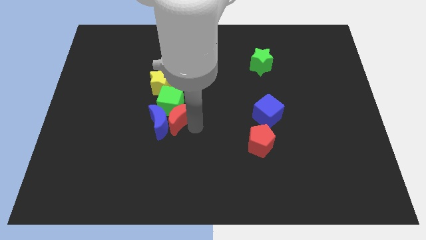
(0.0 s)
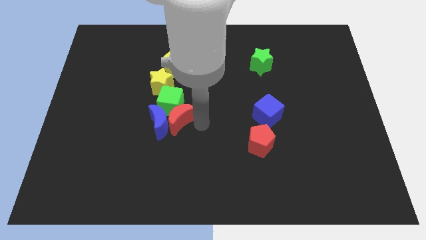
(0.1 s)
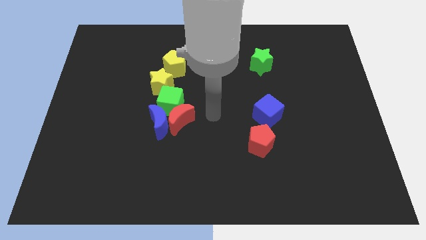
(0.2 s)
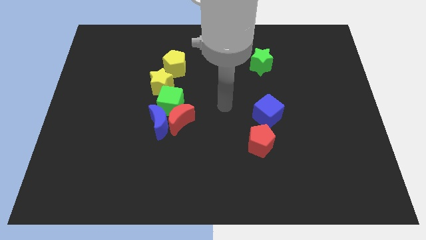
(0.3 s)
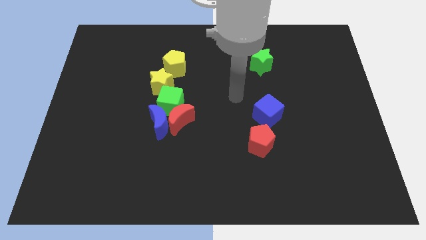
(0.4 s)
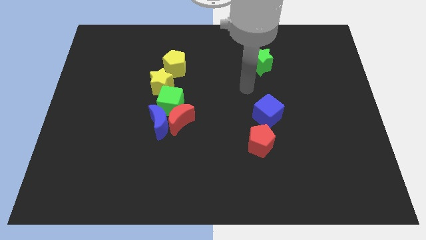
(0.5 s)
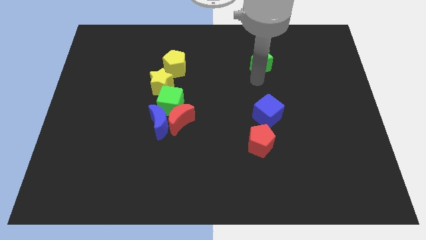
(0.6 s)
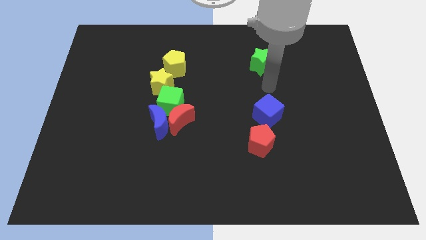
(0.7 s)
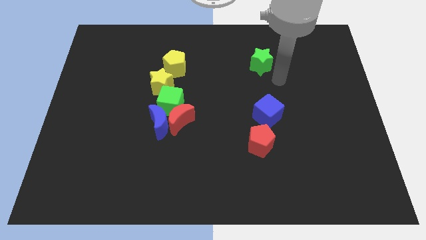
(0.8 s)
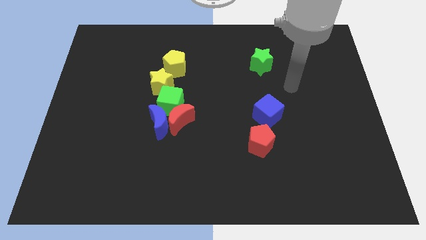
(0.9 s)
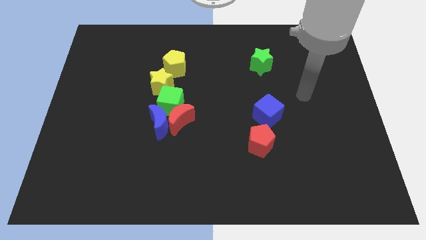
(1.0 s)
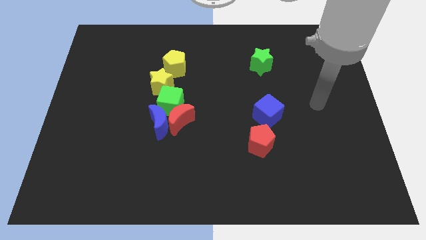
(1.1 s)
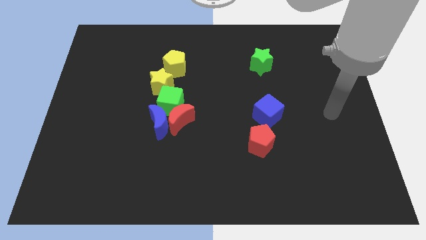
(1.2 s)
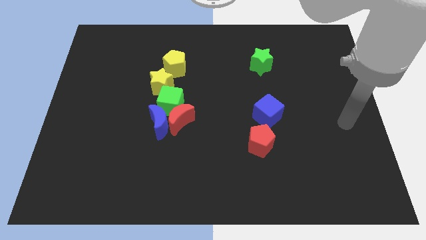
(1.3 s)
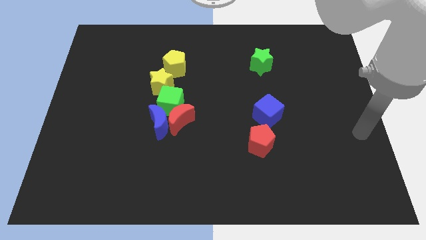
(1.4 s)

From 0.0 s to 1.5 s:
move your arm away from the red crescent

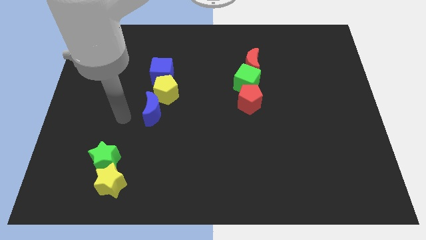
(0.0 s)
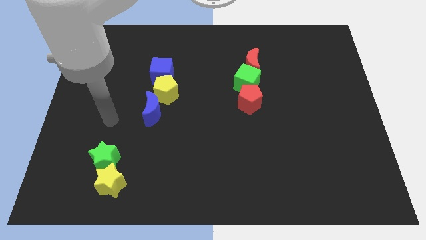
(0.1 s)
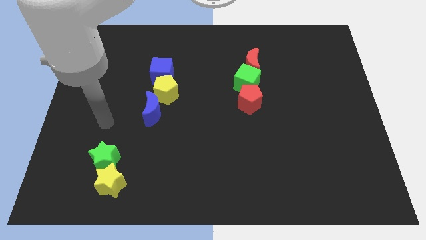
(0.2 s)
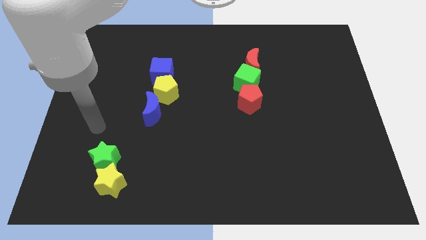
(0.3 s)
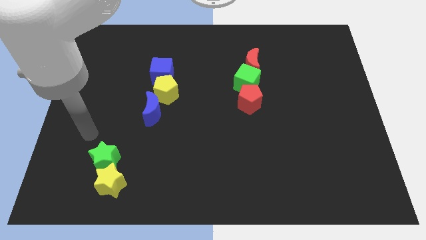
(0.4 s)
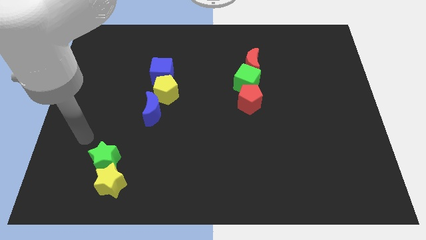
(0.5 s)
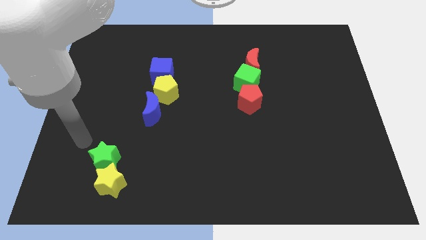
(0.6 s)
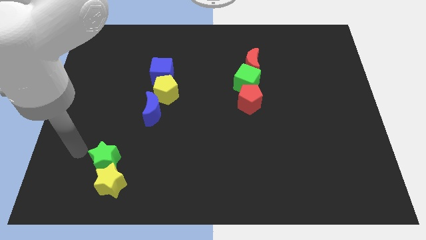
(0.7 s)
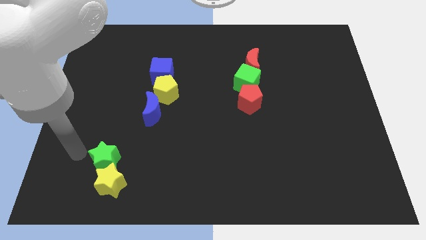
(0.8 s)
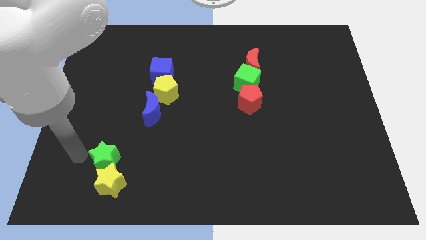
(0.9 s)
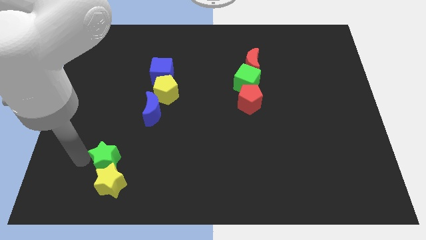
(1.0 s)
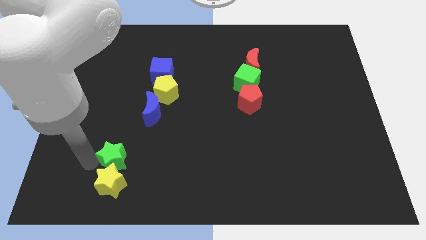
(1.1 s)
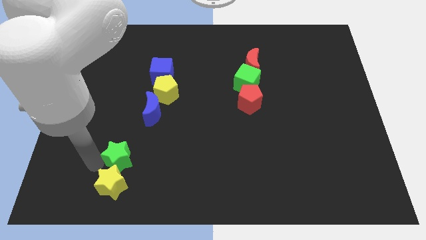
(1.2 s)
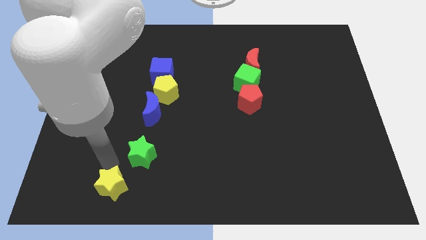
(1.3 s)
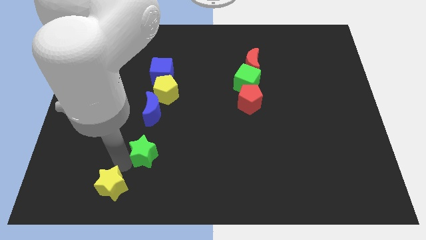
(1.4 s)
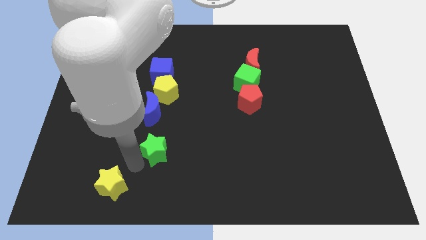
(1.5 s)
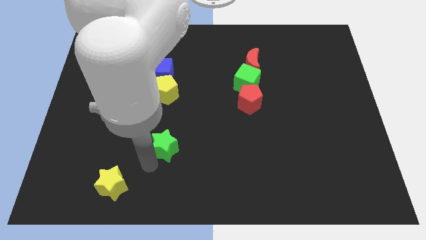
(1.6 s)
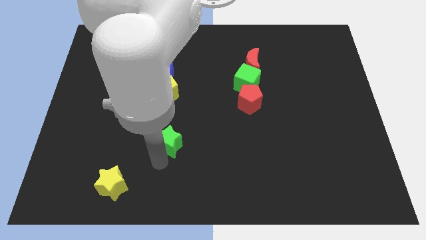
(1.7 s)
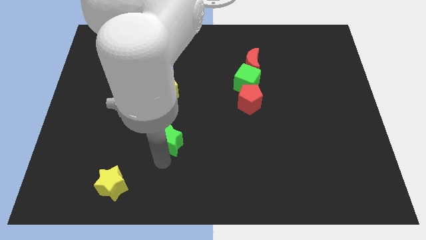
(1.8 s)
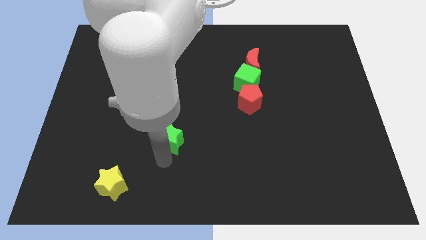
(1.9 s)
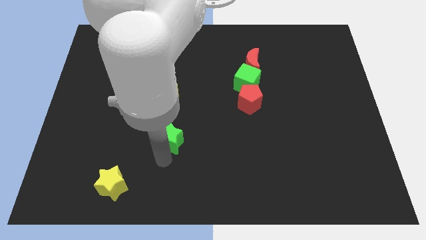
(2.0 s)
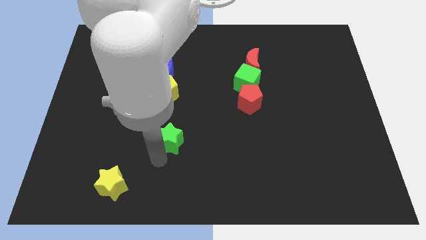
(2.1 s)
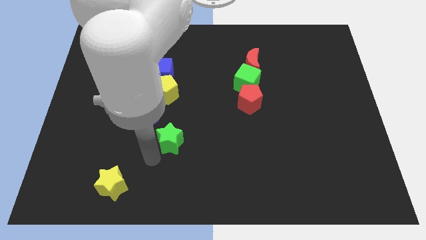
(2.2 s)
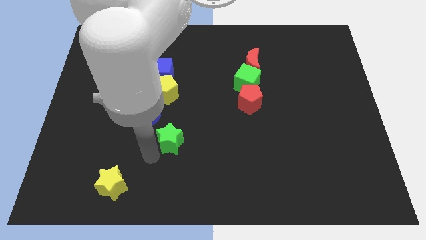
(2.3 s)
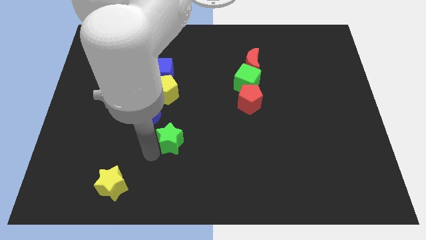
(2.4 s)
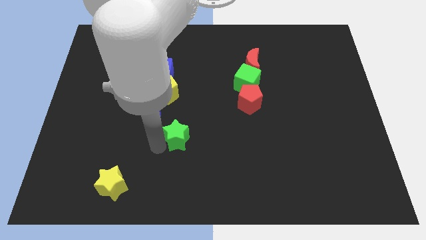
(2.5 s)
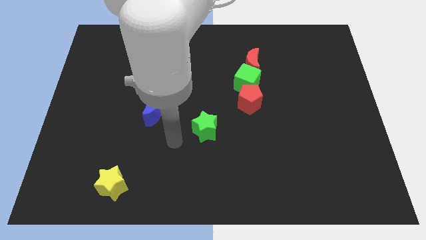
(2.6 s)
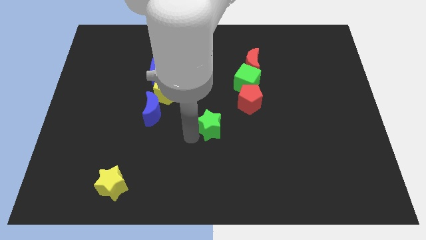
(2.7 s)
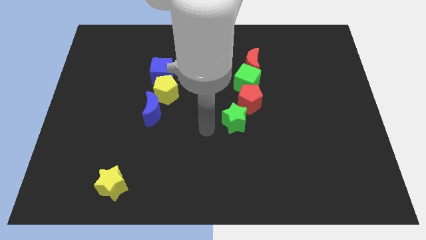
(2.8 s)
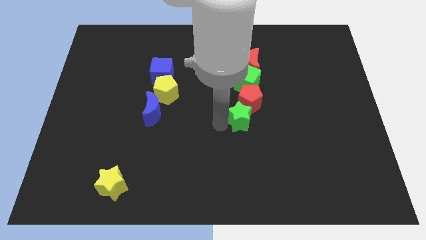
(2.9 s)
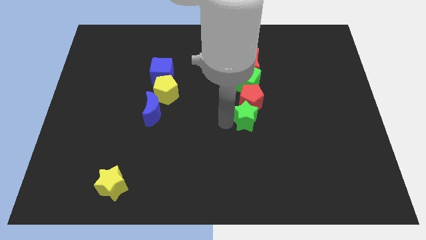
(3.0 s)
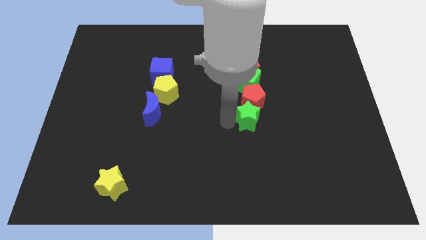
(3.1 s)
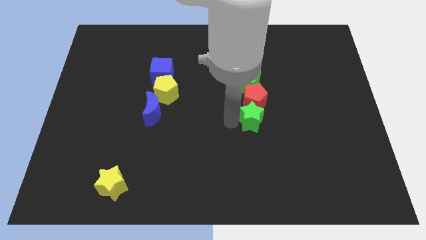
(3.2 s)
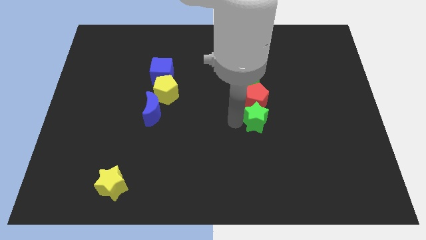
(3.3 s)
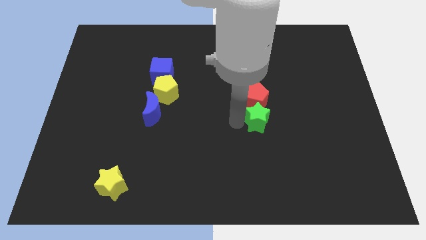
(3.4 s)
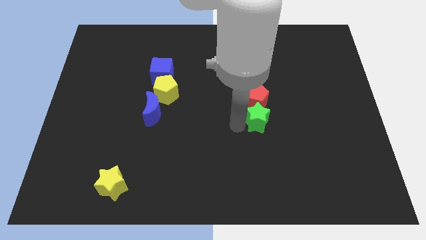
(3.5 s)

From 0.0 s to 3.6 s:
place the green star below the red pentagon

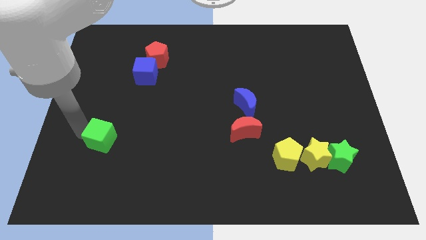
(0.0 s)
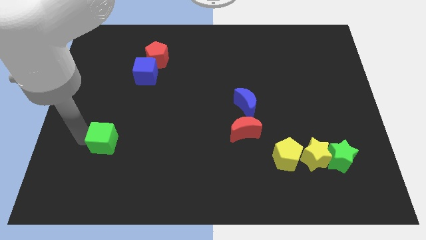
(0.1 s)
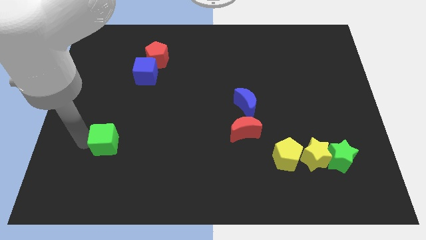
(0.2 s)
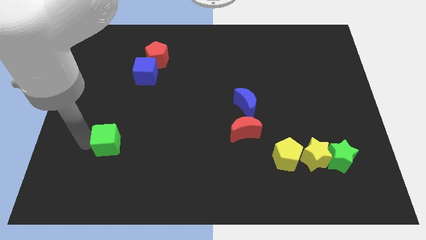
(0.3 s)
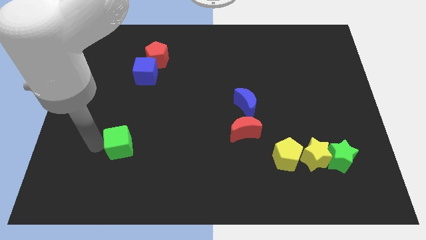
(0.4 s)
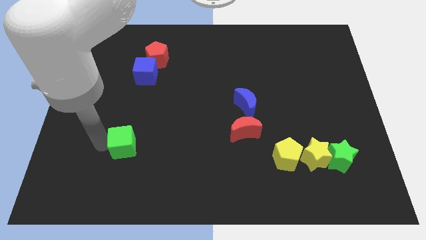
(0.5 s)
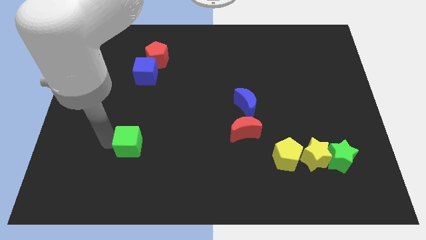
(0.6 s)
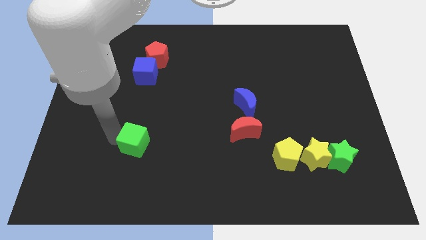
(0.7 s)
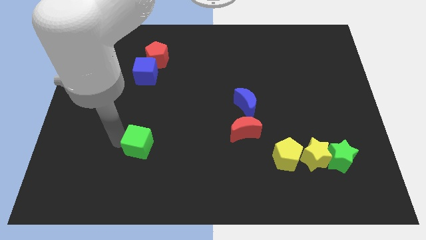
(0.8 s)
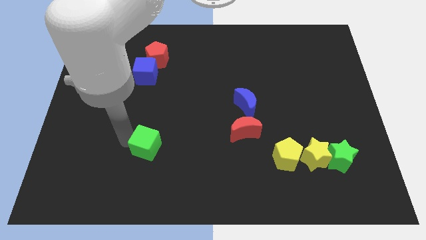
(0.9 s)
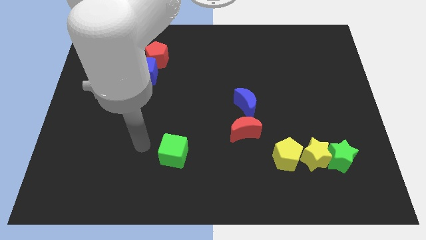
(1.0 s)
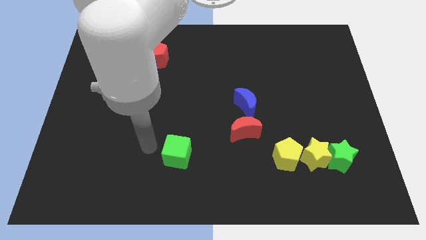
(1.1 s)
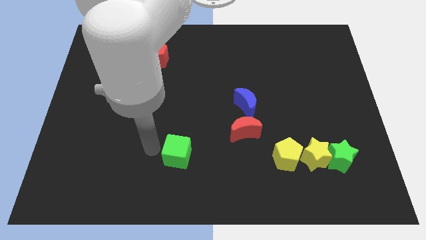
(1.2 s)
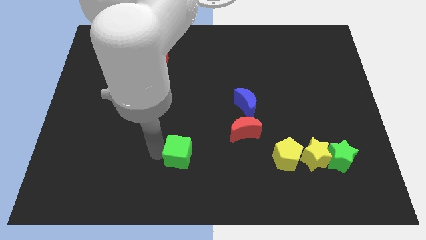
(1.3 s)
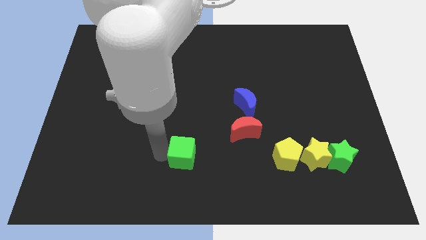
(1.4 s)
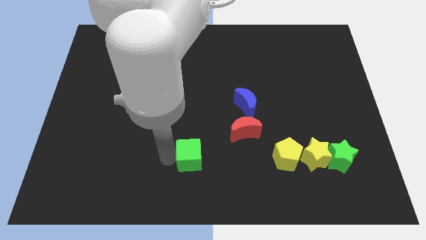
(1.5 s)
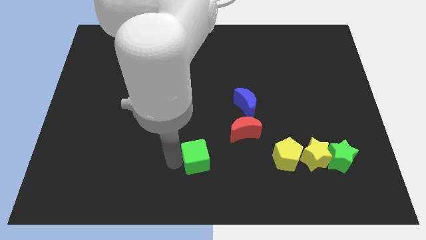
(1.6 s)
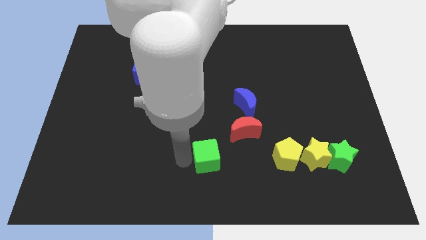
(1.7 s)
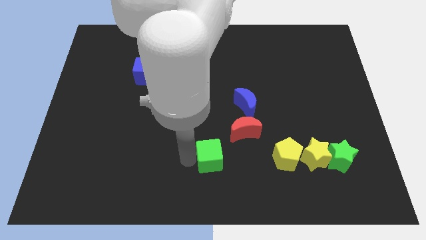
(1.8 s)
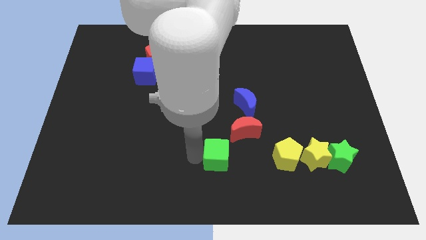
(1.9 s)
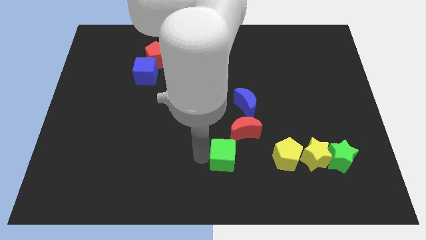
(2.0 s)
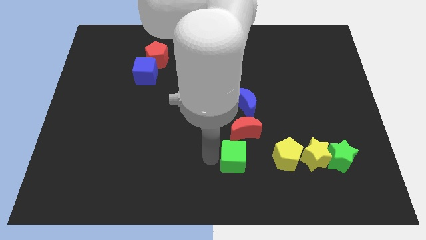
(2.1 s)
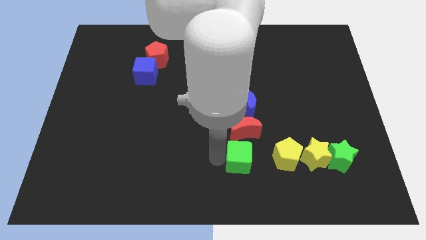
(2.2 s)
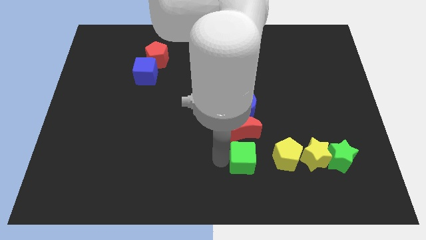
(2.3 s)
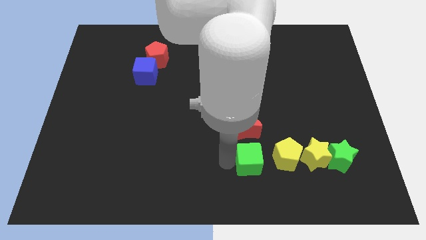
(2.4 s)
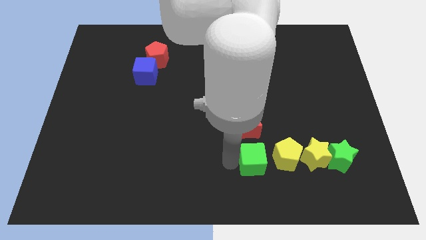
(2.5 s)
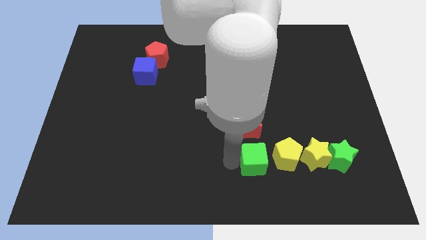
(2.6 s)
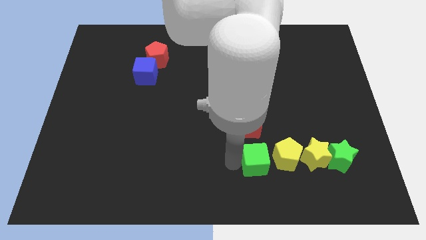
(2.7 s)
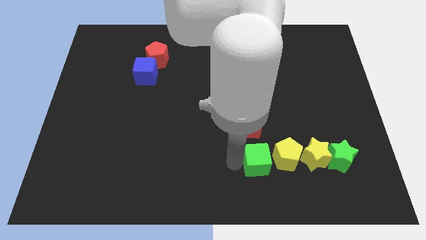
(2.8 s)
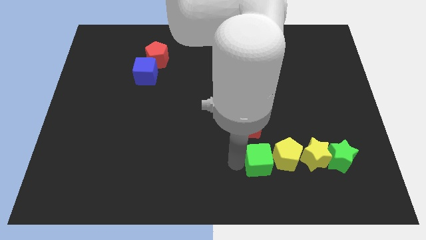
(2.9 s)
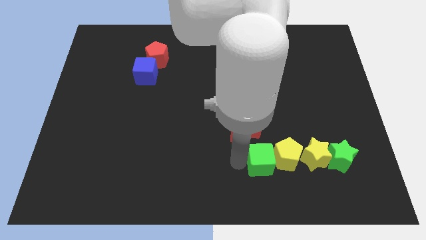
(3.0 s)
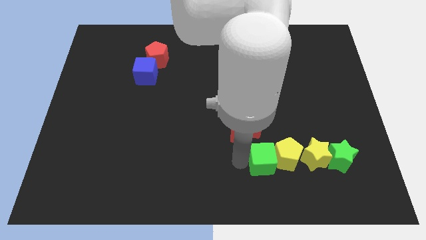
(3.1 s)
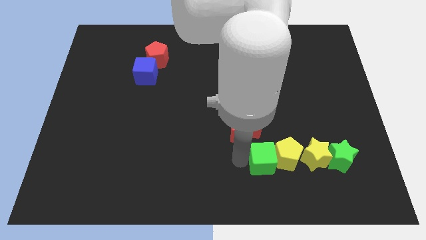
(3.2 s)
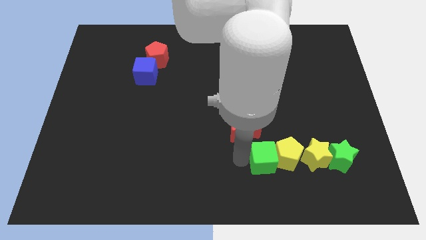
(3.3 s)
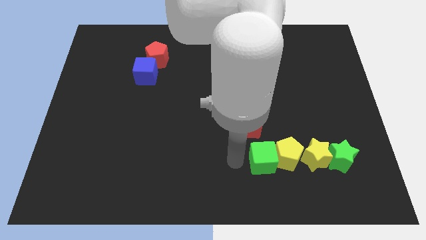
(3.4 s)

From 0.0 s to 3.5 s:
place green cube at the left side of yellow pentagon

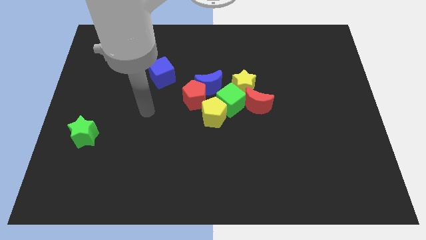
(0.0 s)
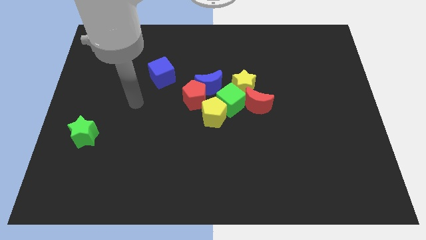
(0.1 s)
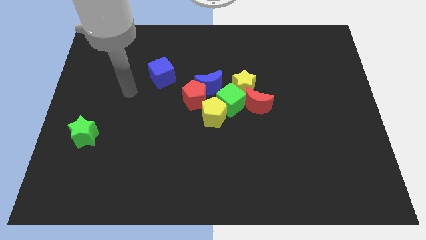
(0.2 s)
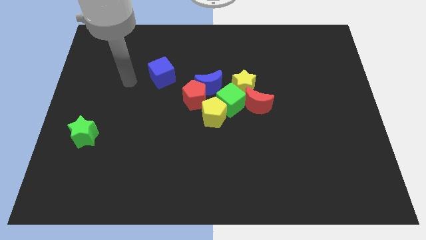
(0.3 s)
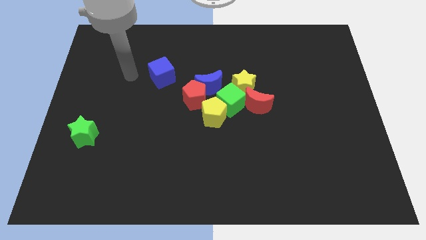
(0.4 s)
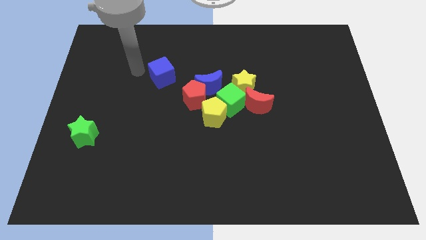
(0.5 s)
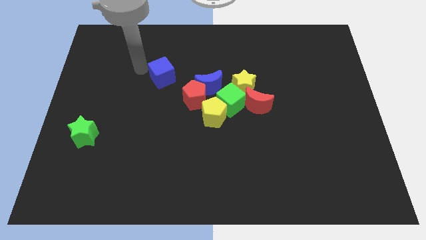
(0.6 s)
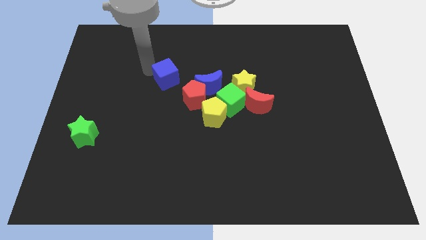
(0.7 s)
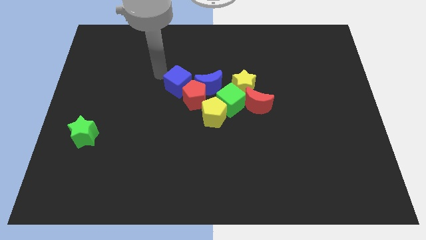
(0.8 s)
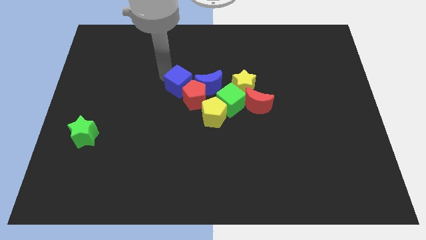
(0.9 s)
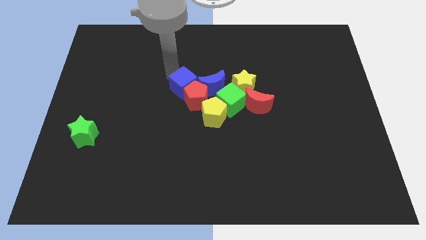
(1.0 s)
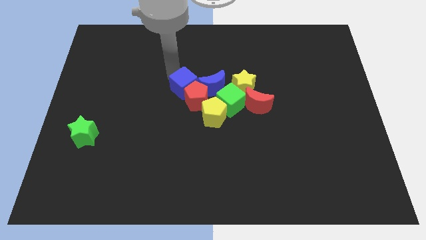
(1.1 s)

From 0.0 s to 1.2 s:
slide blue cube into red pentagon
